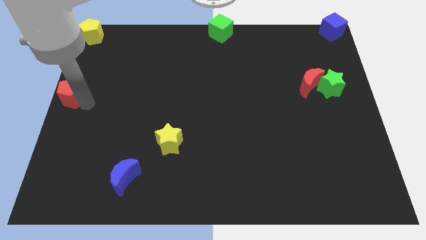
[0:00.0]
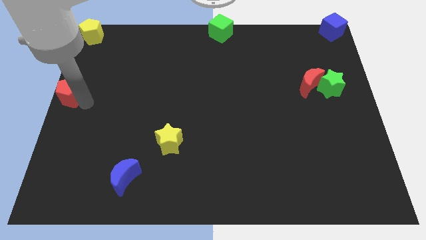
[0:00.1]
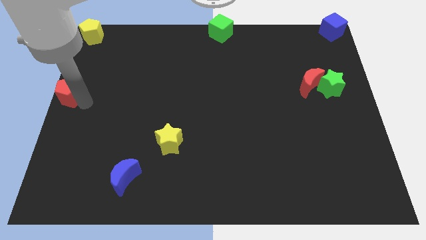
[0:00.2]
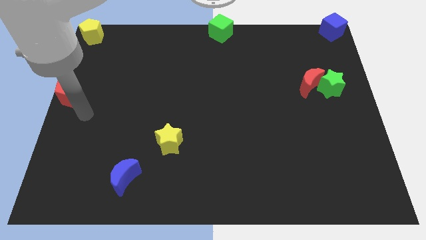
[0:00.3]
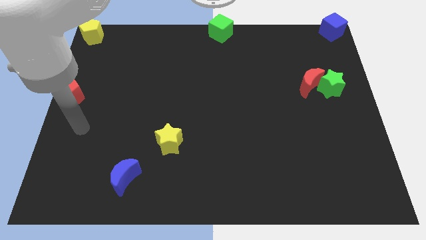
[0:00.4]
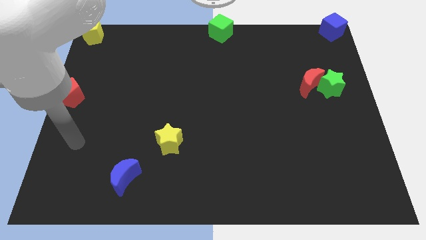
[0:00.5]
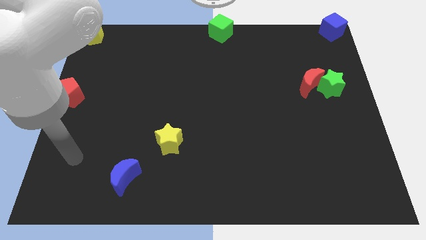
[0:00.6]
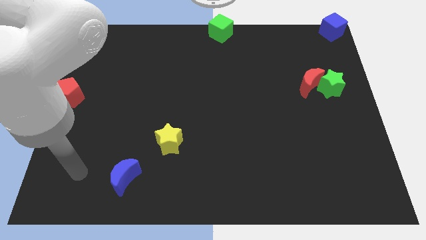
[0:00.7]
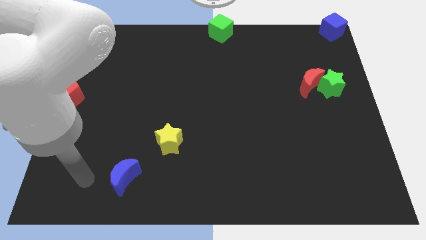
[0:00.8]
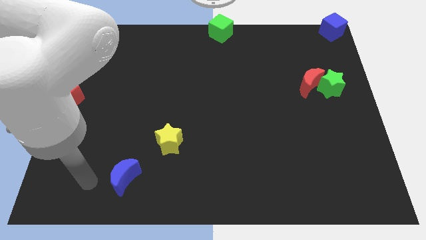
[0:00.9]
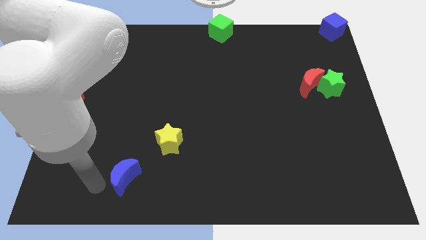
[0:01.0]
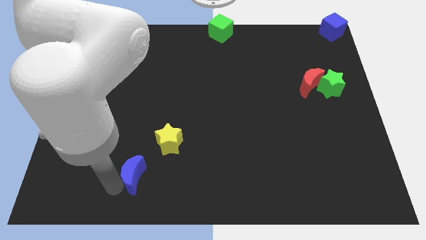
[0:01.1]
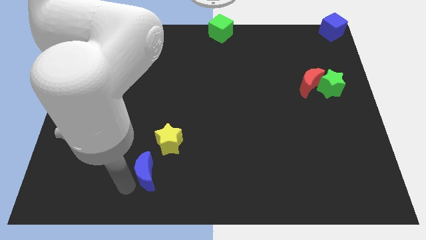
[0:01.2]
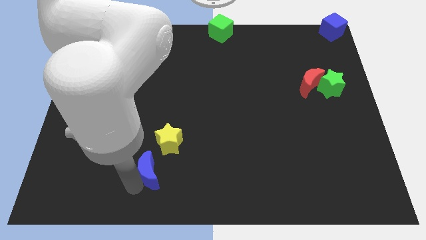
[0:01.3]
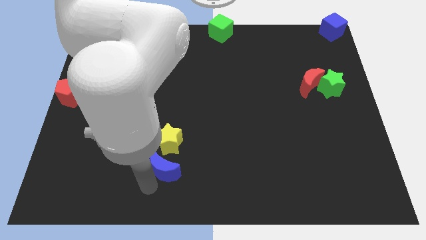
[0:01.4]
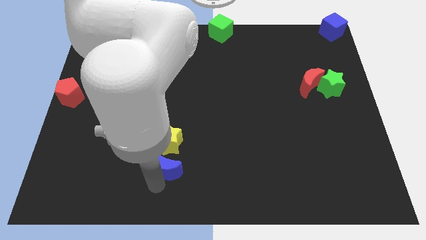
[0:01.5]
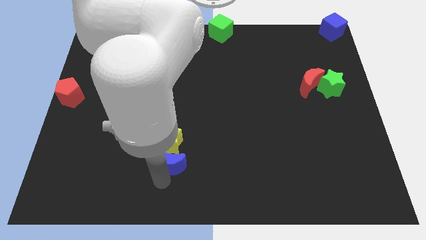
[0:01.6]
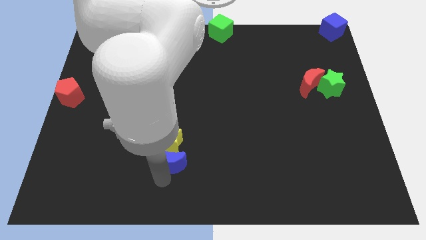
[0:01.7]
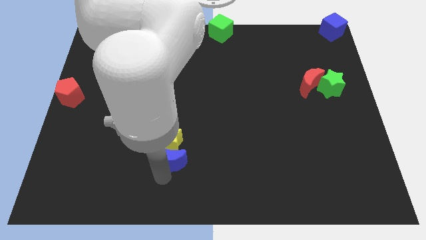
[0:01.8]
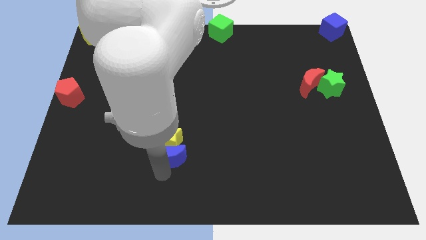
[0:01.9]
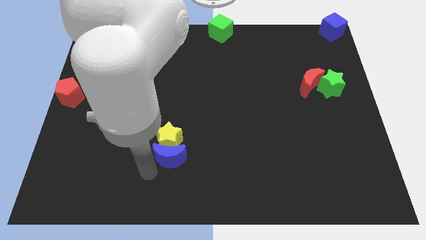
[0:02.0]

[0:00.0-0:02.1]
push blue crescent below yellow star

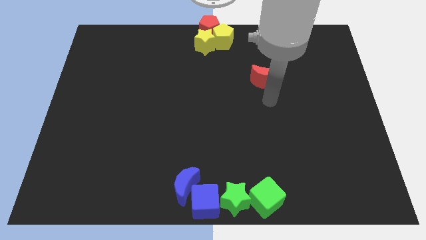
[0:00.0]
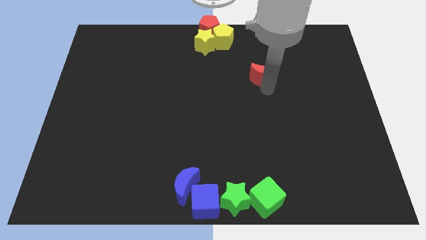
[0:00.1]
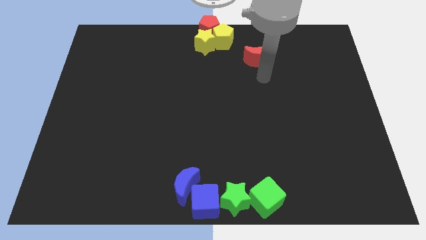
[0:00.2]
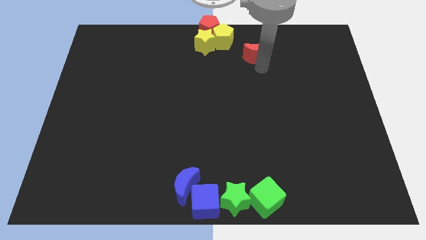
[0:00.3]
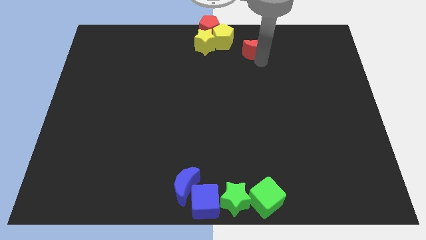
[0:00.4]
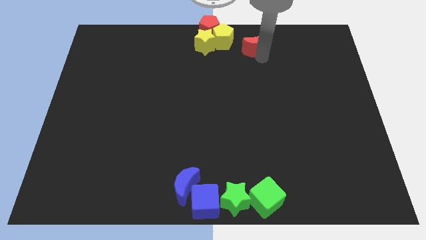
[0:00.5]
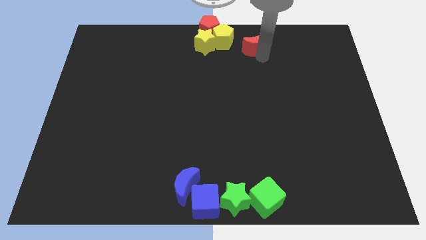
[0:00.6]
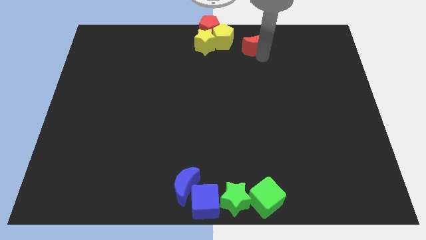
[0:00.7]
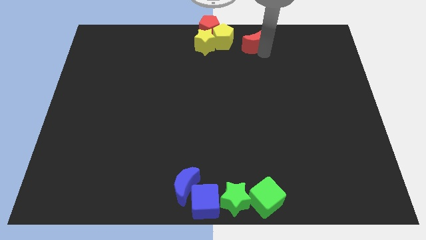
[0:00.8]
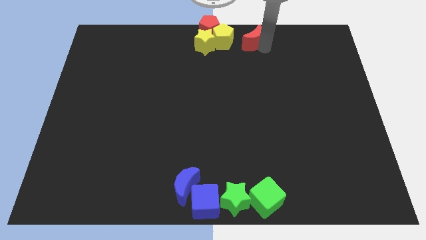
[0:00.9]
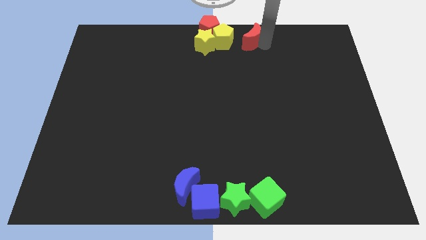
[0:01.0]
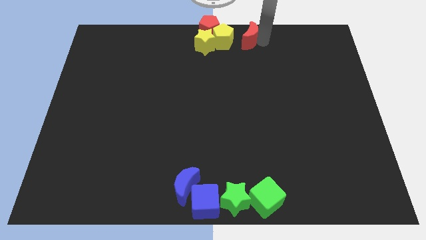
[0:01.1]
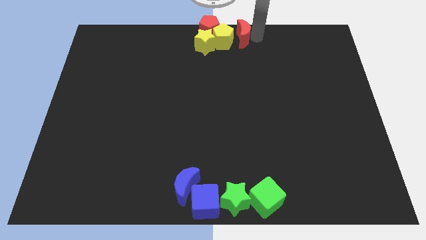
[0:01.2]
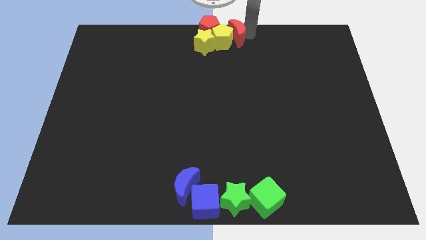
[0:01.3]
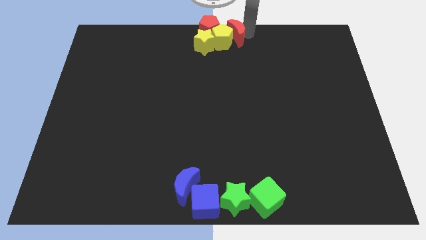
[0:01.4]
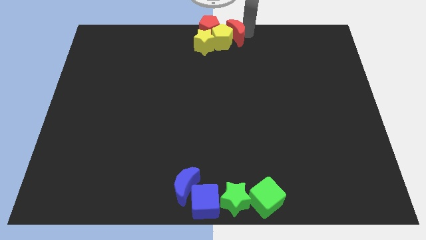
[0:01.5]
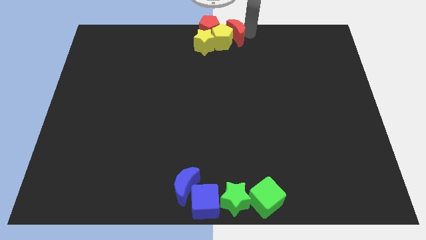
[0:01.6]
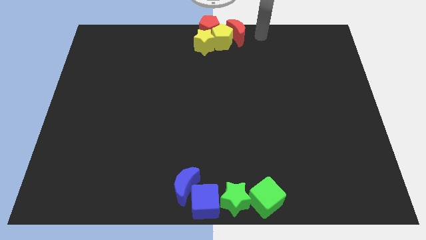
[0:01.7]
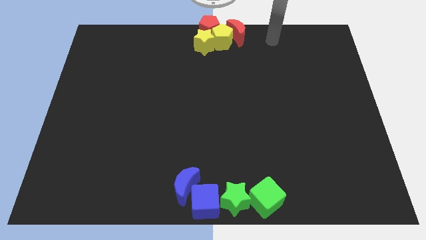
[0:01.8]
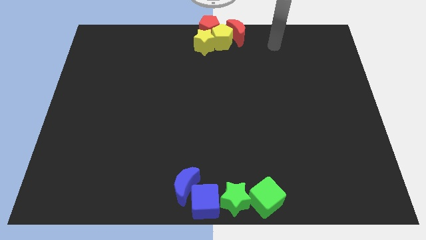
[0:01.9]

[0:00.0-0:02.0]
push the red moon into the yellow pentagon

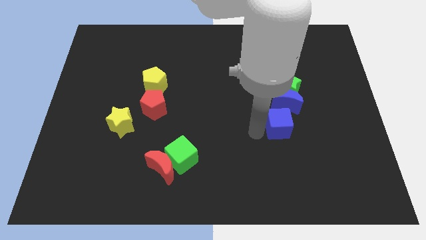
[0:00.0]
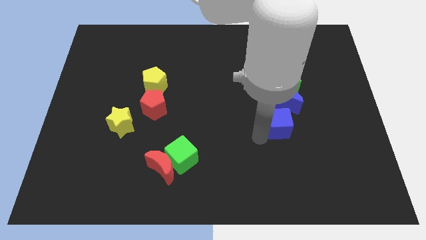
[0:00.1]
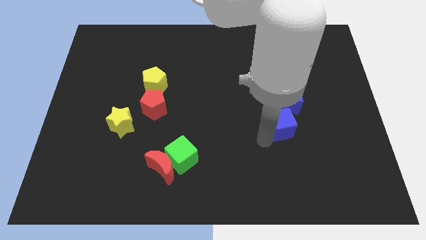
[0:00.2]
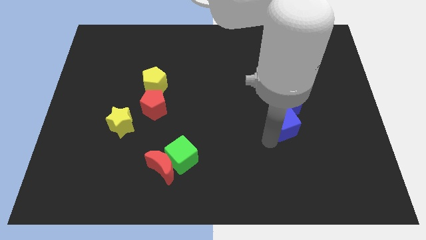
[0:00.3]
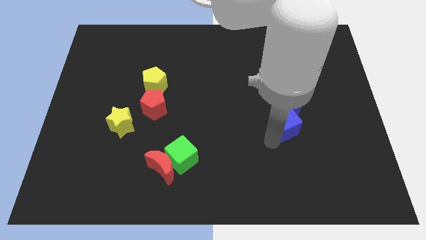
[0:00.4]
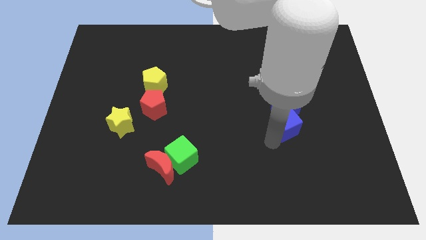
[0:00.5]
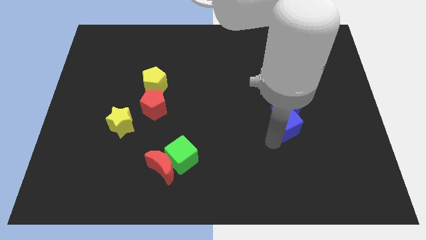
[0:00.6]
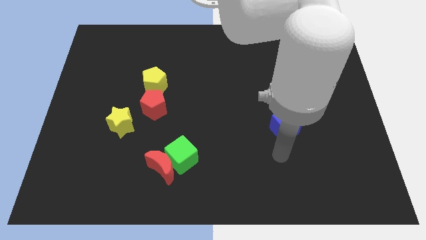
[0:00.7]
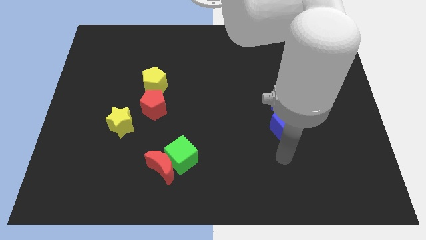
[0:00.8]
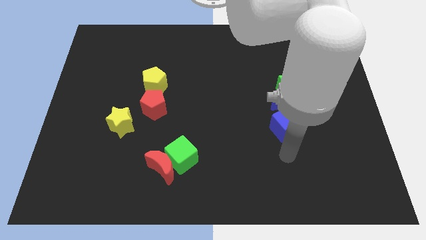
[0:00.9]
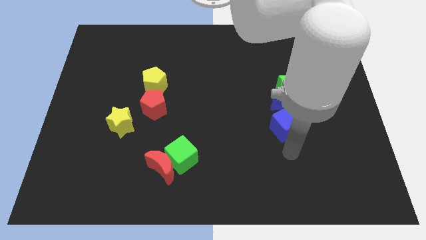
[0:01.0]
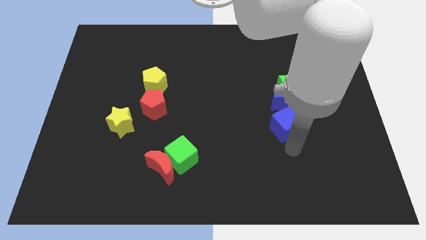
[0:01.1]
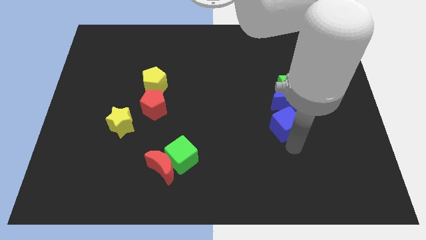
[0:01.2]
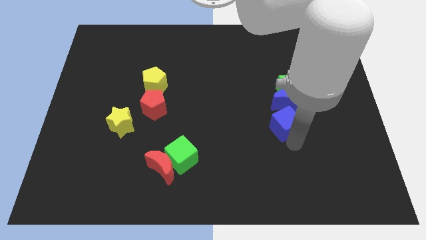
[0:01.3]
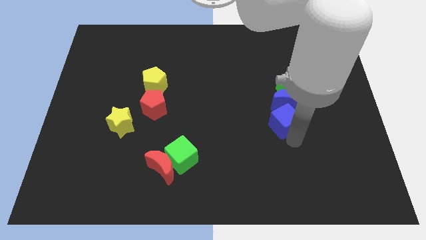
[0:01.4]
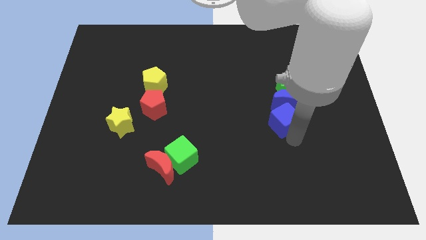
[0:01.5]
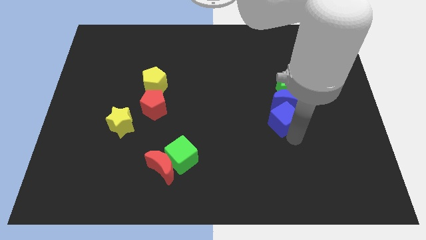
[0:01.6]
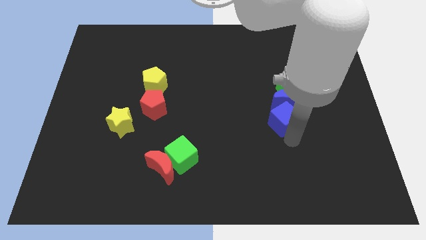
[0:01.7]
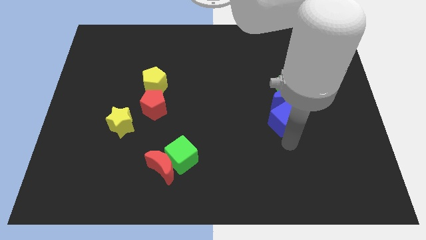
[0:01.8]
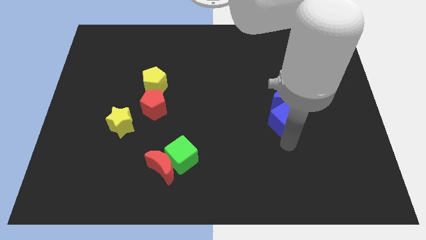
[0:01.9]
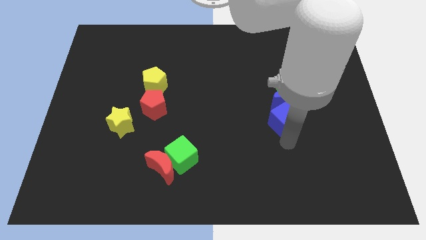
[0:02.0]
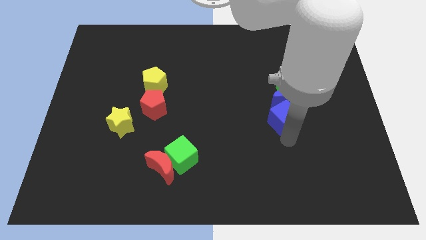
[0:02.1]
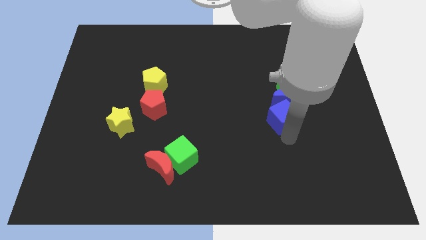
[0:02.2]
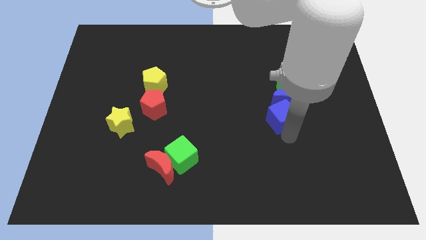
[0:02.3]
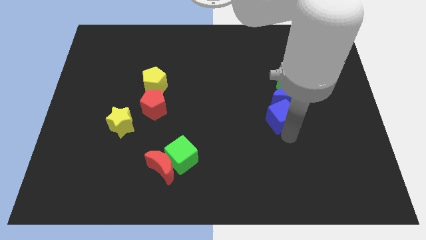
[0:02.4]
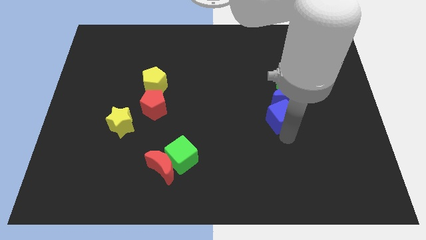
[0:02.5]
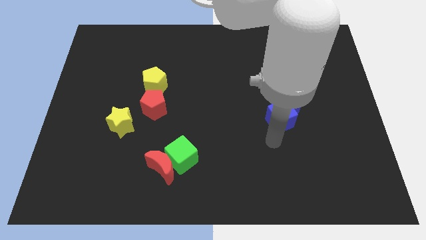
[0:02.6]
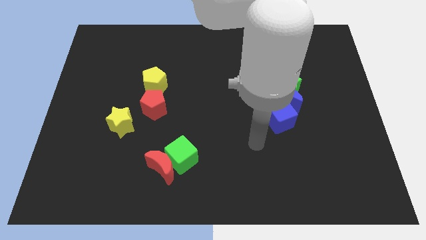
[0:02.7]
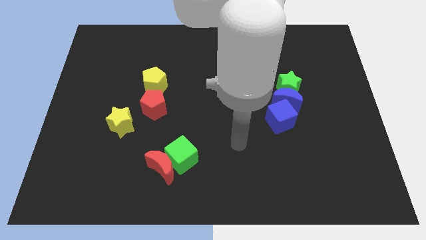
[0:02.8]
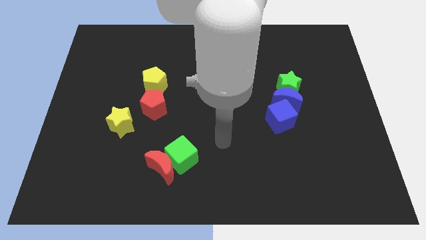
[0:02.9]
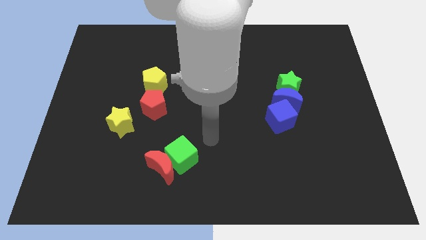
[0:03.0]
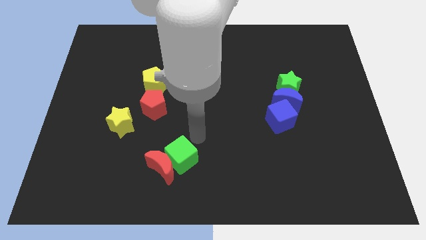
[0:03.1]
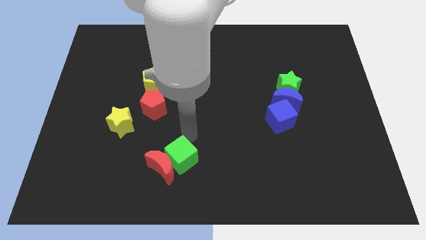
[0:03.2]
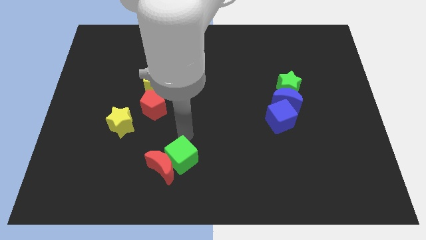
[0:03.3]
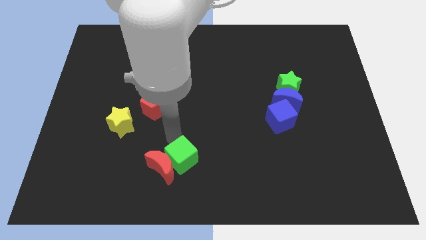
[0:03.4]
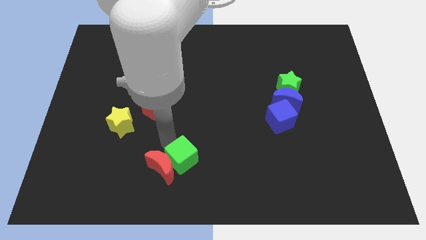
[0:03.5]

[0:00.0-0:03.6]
push the blue cube into blue crescent

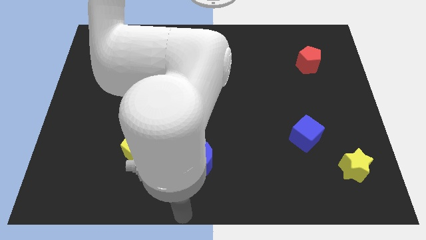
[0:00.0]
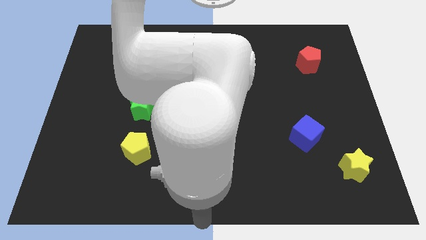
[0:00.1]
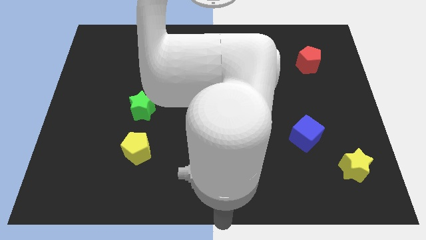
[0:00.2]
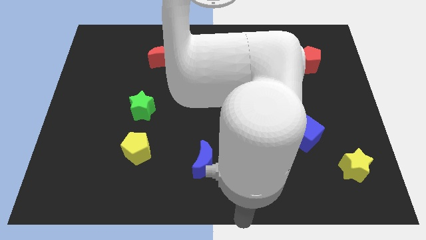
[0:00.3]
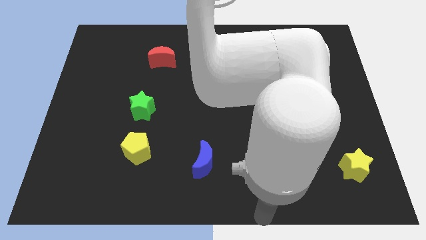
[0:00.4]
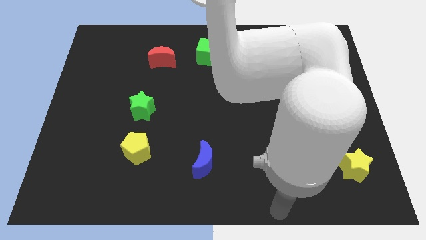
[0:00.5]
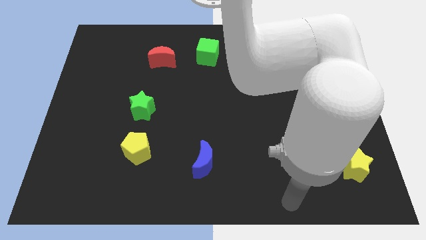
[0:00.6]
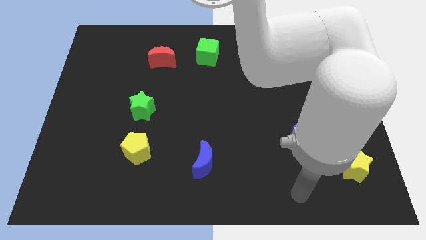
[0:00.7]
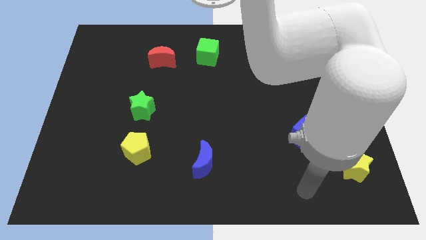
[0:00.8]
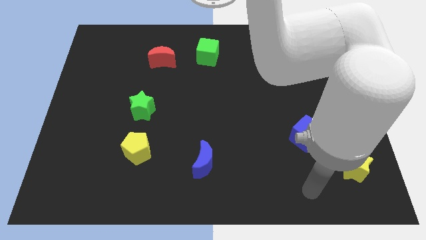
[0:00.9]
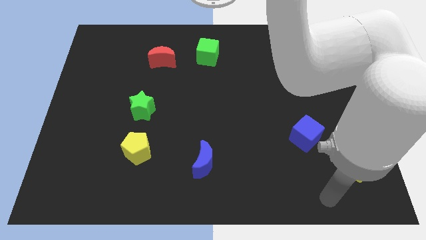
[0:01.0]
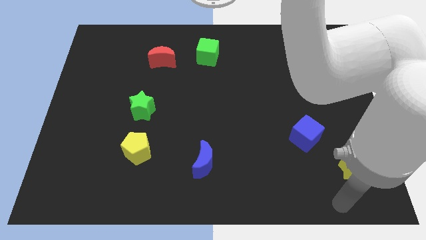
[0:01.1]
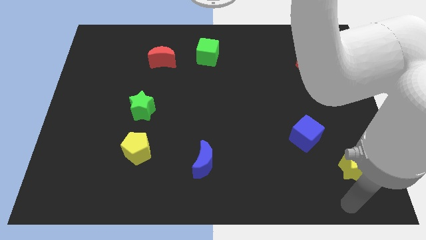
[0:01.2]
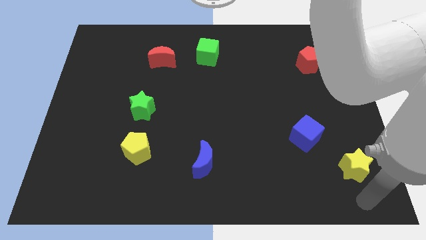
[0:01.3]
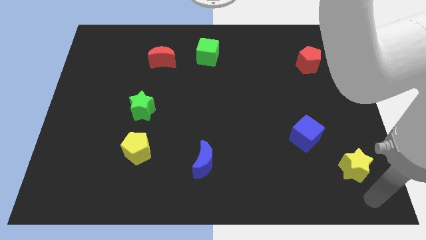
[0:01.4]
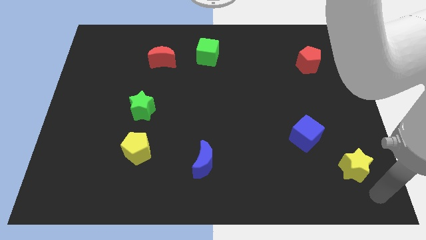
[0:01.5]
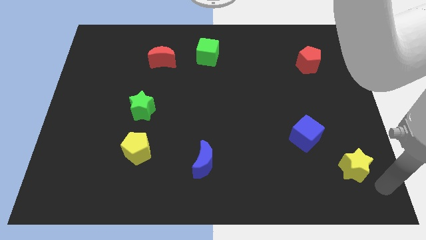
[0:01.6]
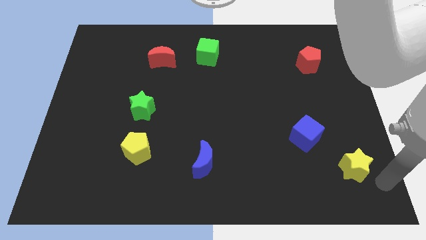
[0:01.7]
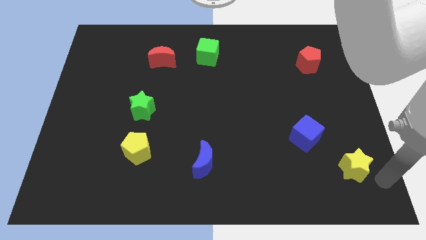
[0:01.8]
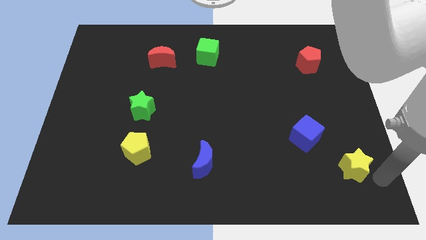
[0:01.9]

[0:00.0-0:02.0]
move your arm to the right of the yellow star
